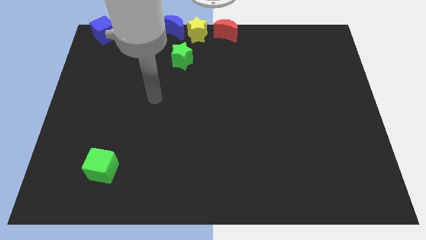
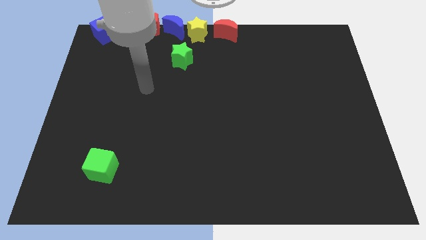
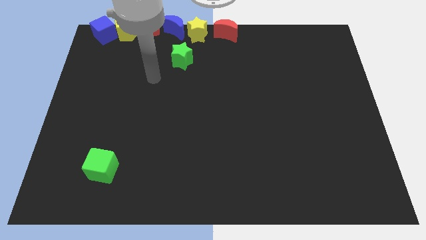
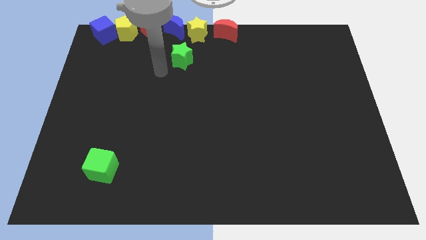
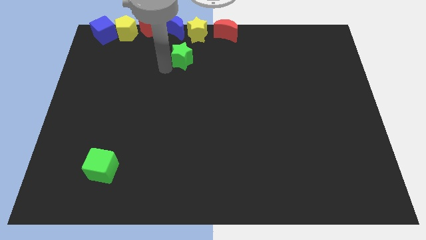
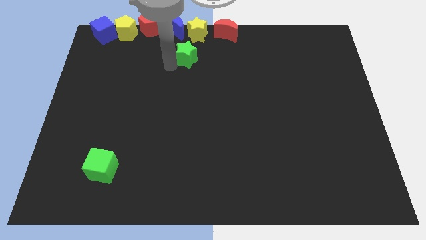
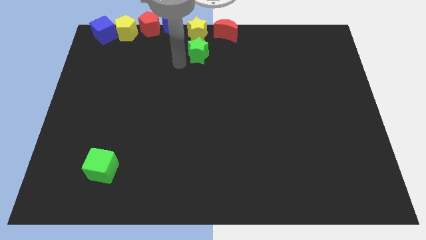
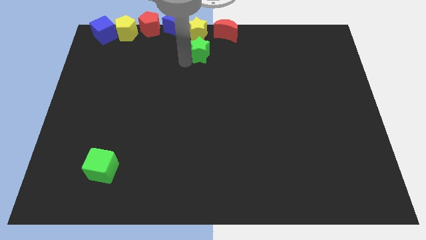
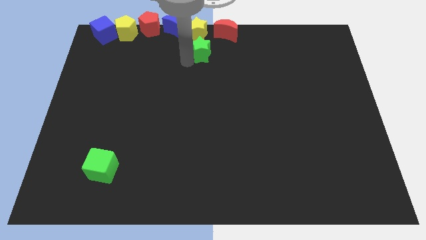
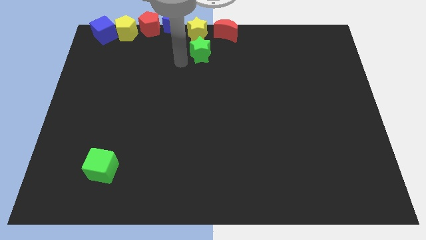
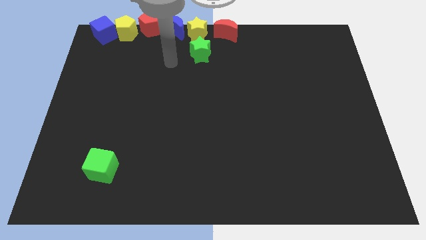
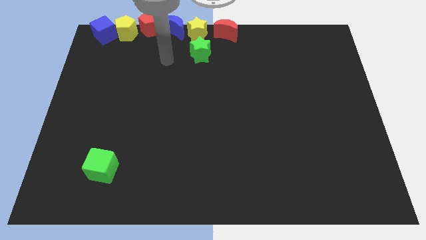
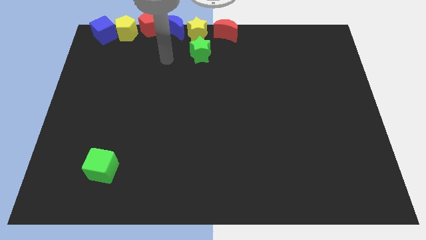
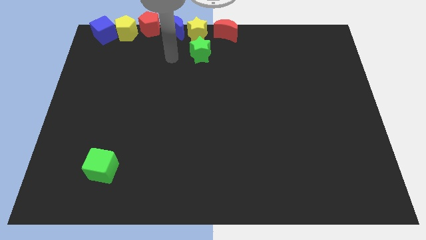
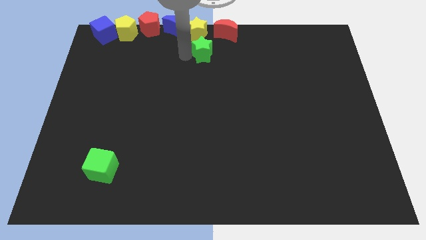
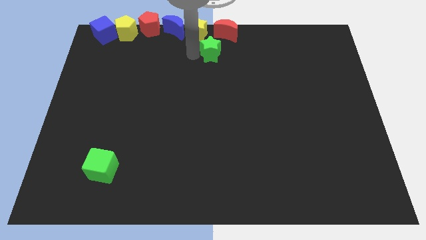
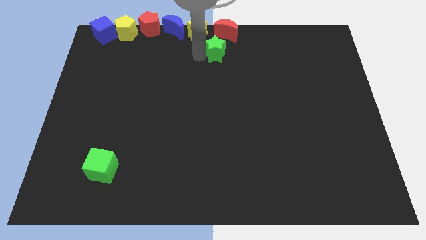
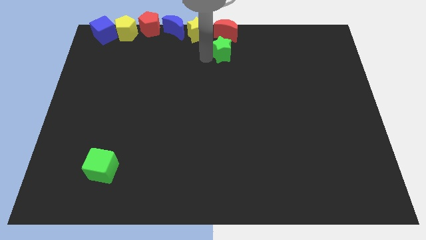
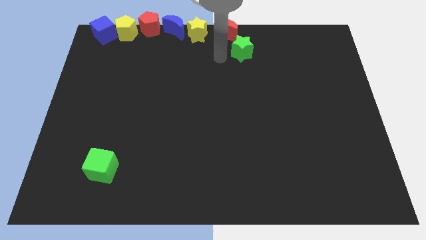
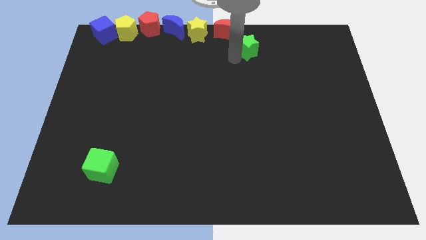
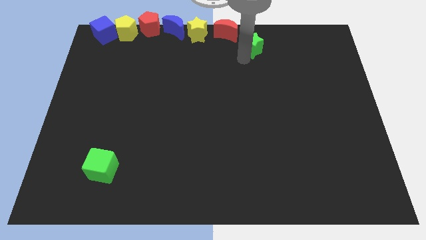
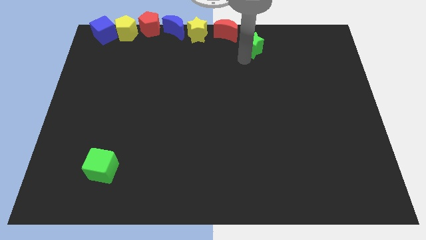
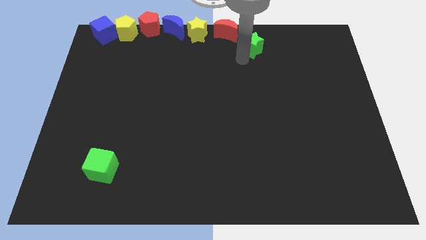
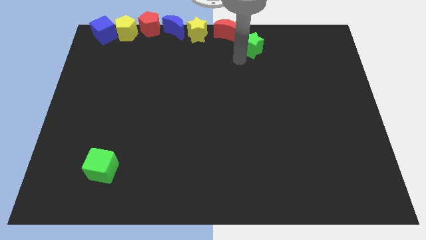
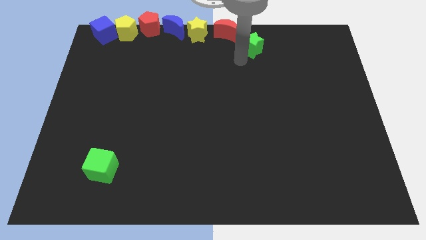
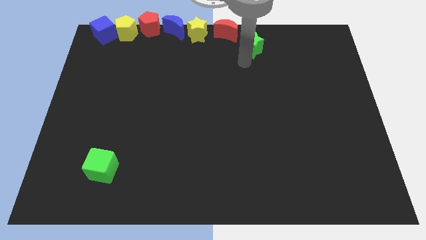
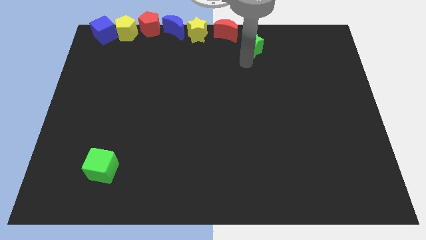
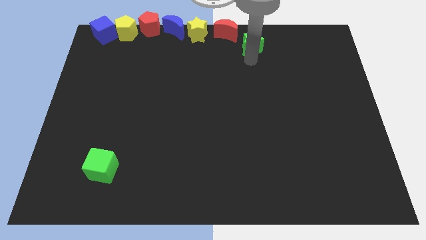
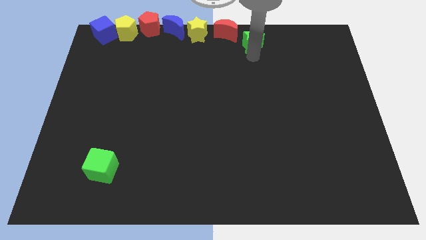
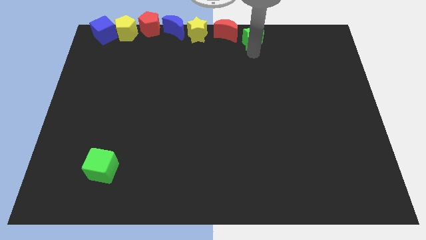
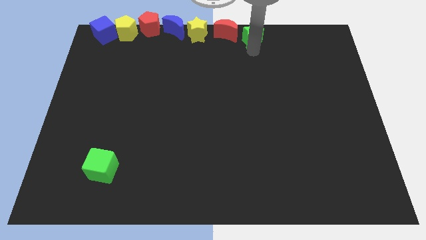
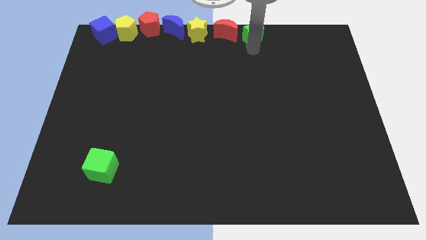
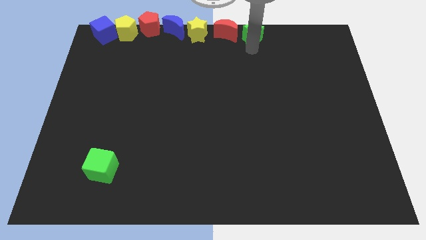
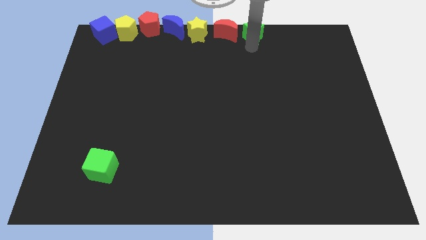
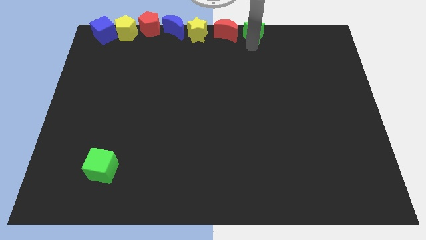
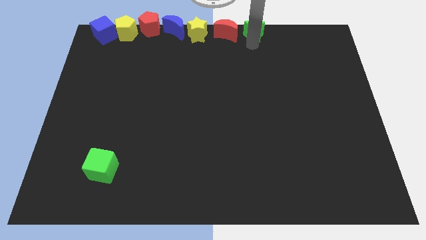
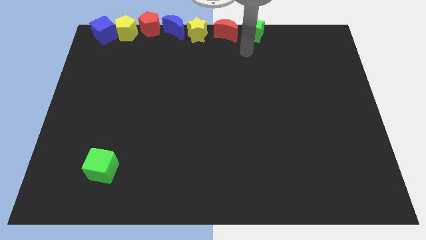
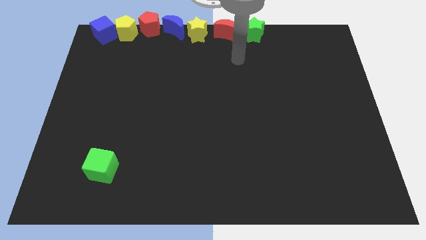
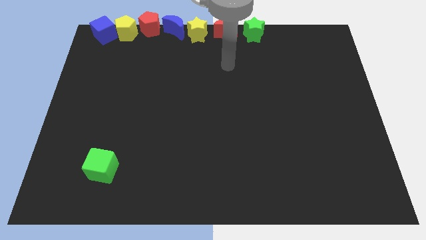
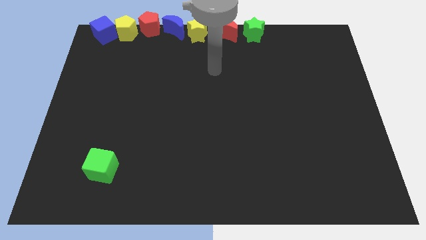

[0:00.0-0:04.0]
move the green star to the right of the red crescent

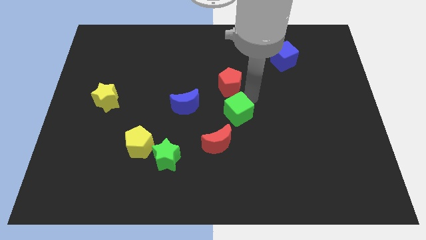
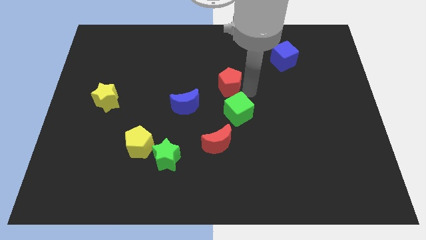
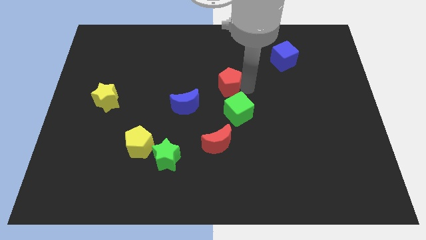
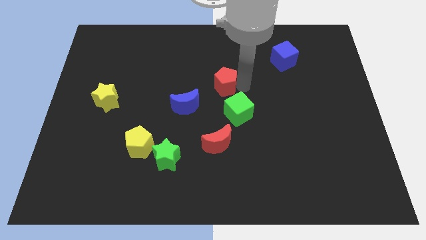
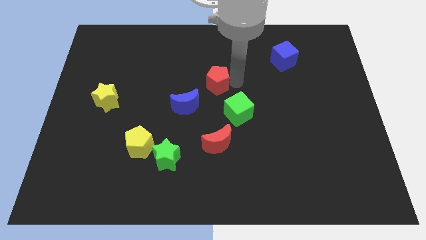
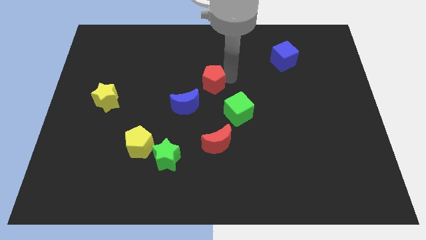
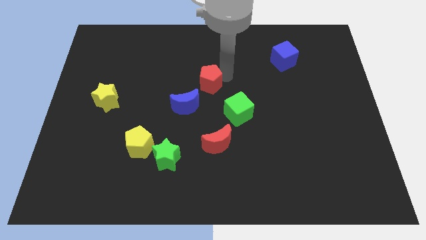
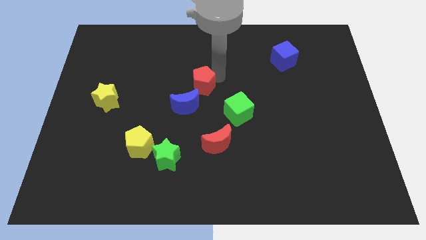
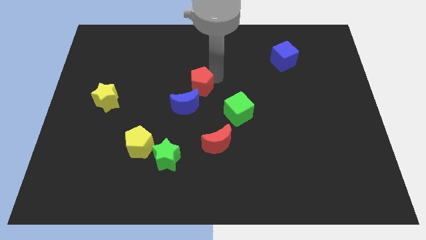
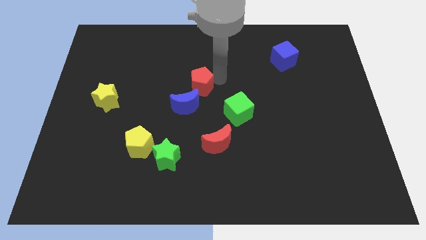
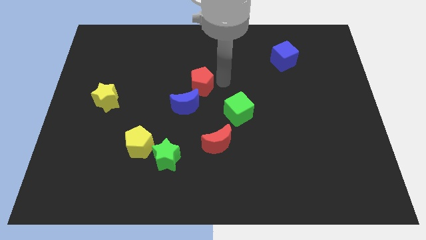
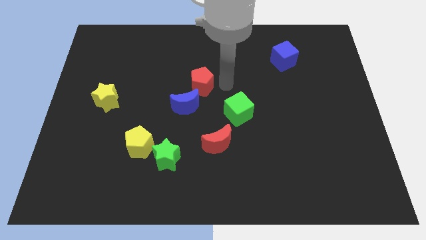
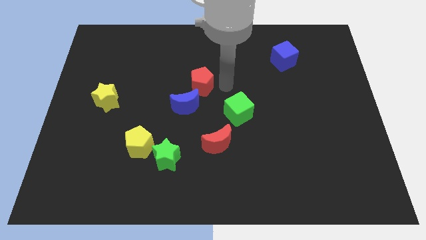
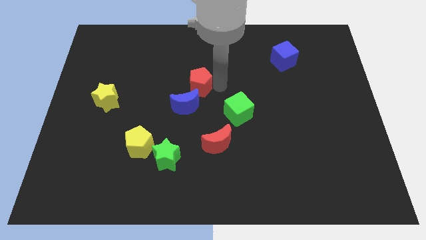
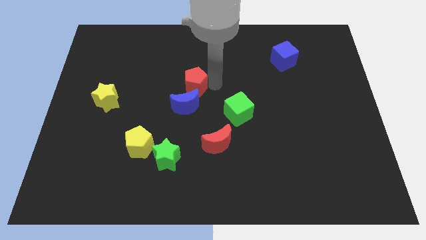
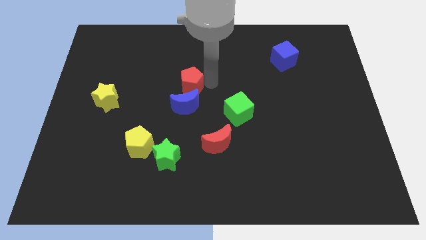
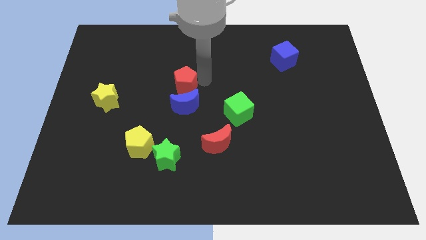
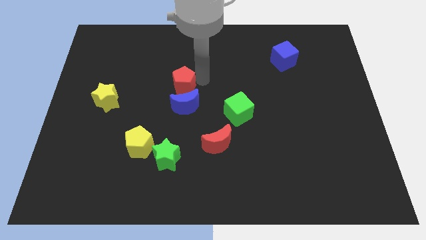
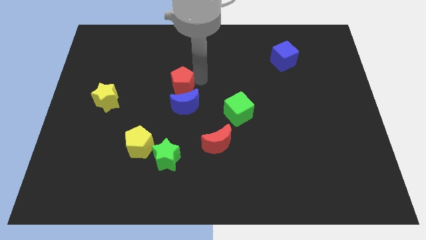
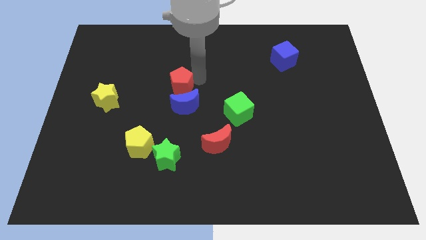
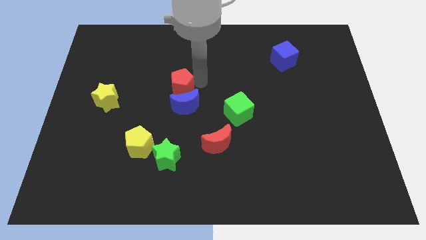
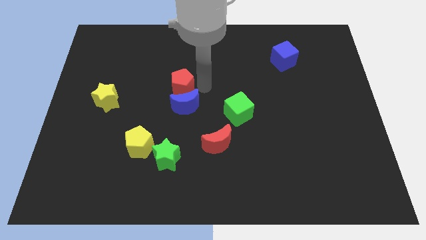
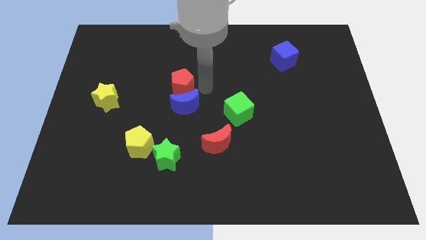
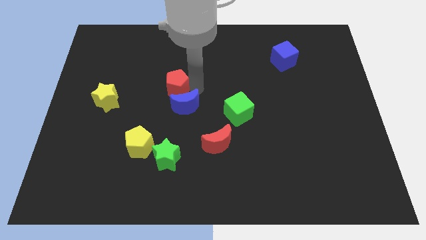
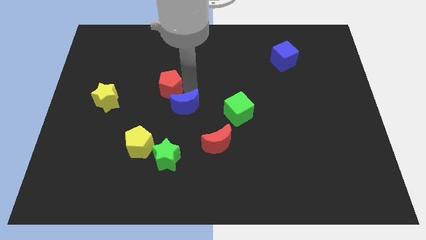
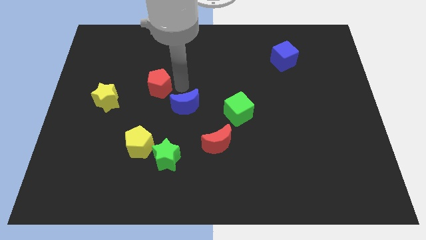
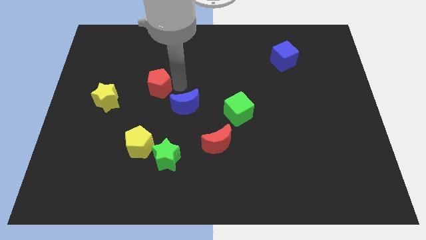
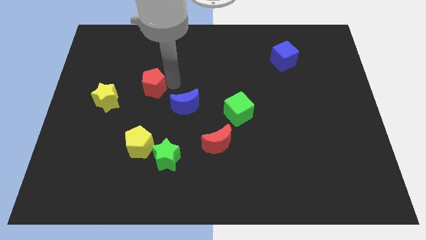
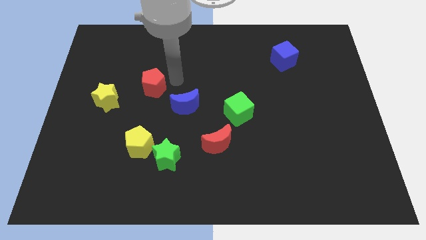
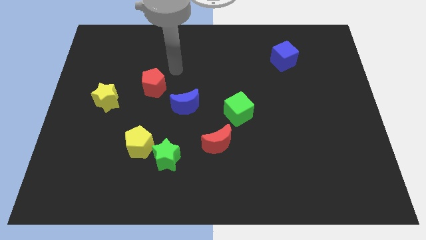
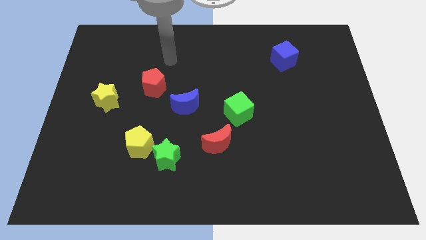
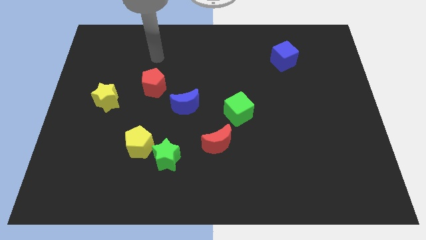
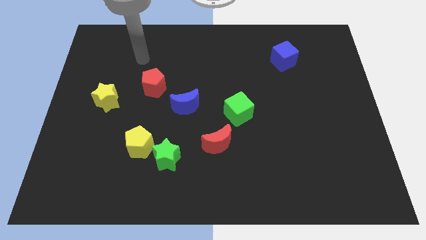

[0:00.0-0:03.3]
move the red pentagon at the right side of the yellow star

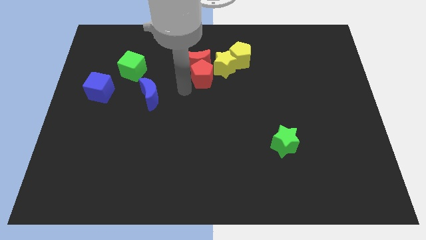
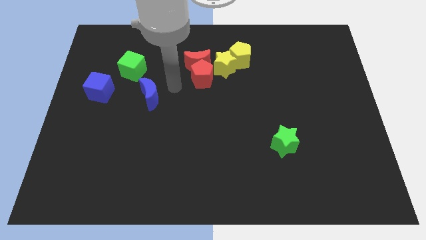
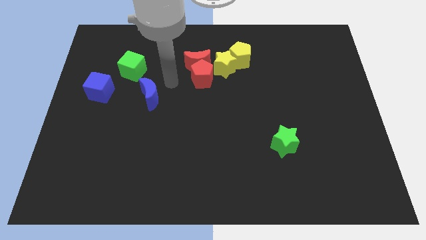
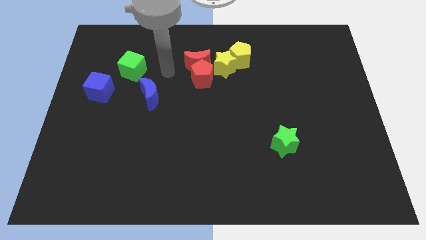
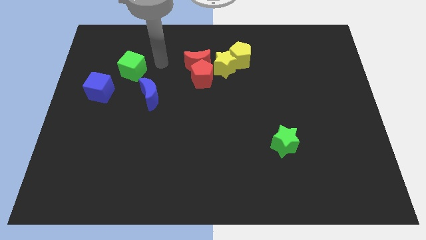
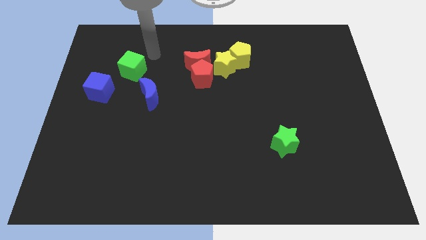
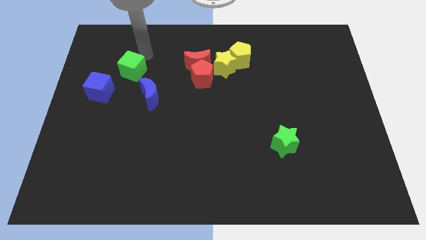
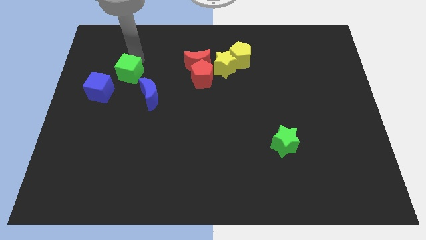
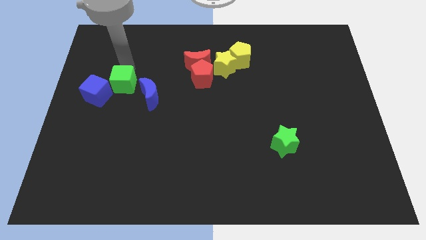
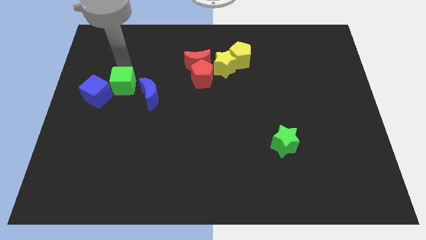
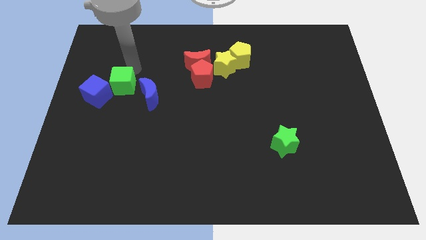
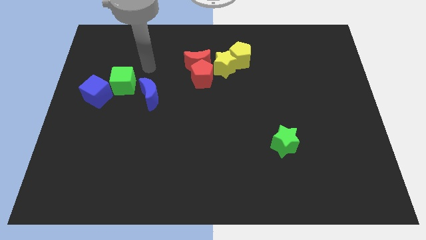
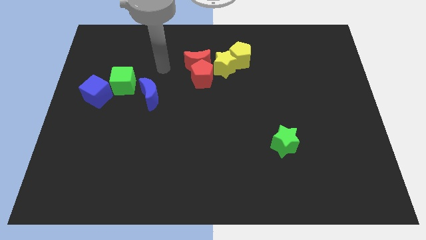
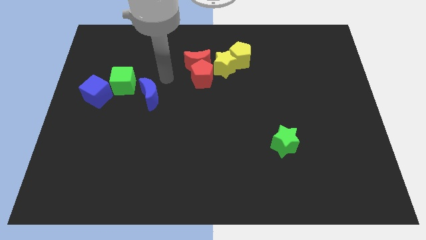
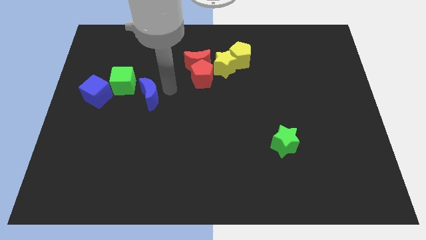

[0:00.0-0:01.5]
place the green cube into the blue cube
